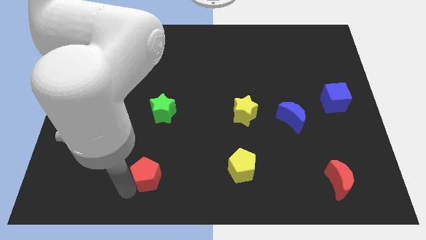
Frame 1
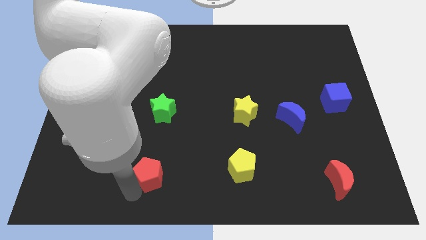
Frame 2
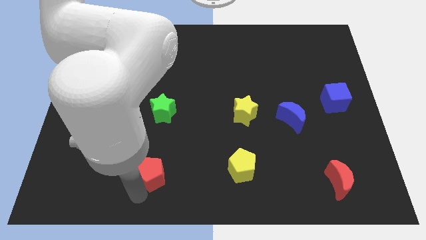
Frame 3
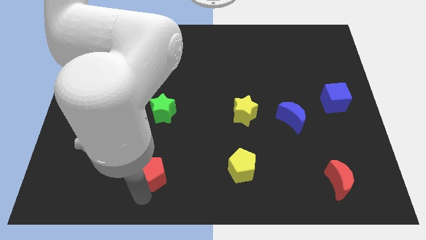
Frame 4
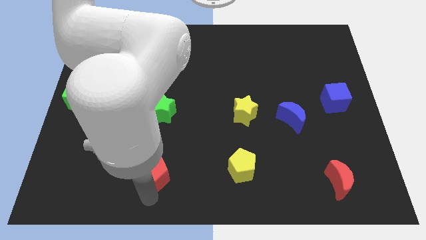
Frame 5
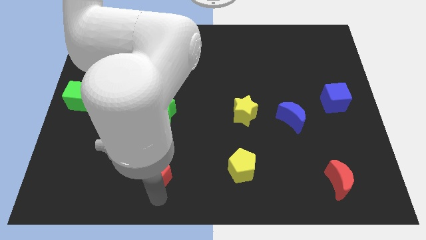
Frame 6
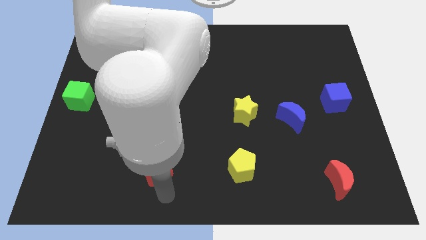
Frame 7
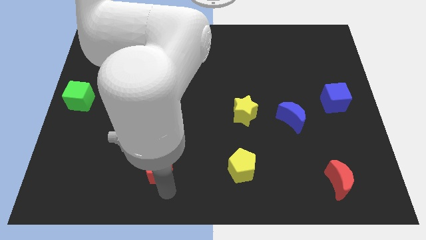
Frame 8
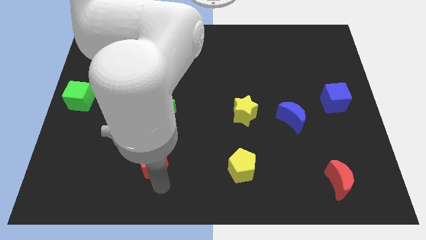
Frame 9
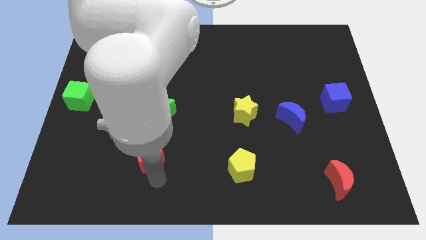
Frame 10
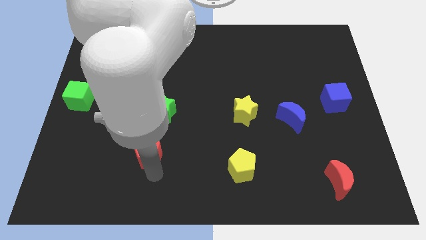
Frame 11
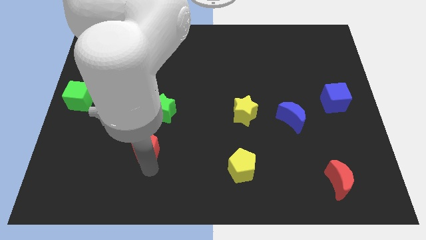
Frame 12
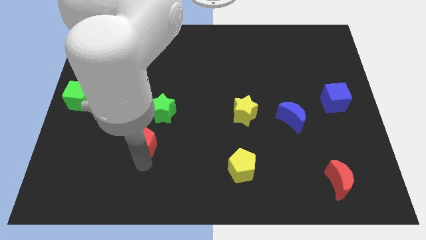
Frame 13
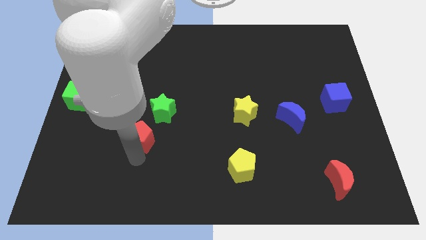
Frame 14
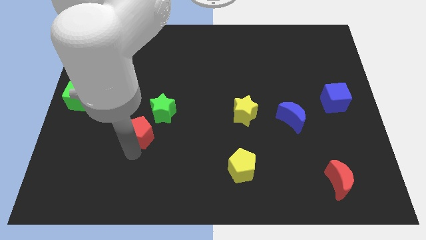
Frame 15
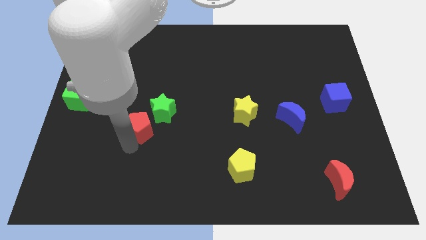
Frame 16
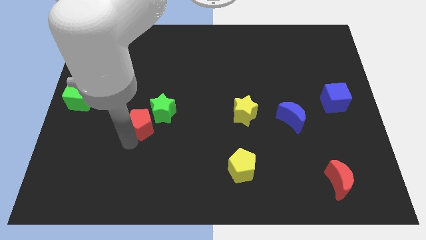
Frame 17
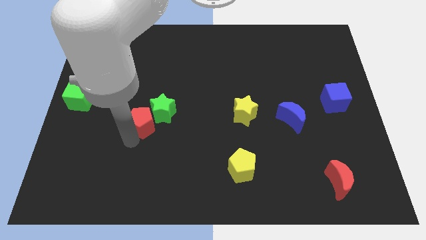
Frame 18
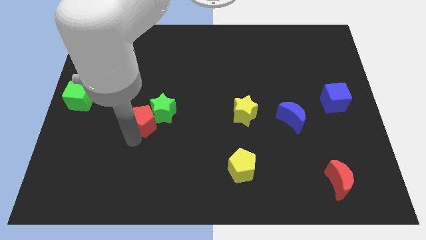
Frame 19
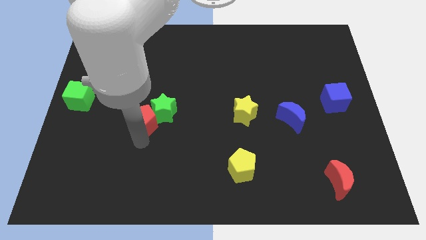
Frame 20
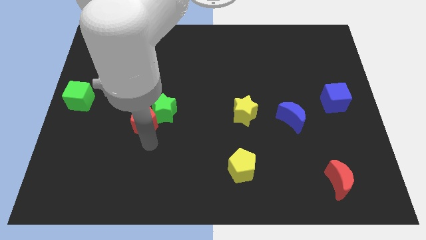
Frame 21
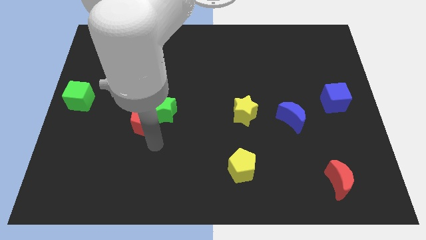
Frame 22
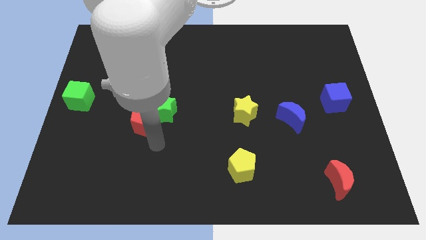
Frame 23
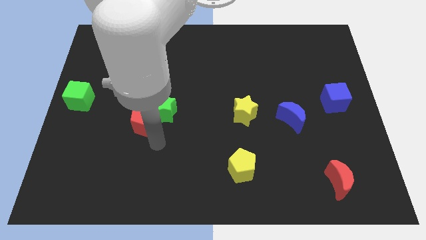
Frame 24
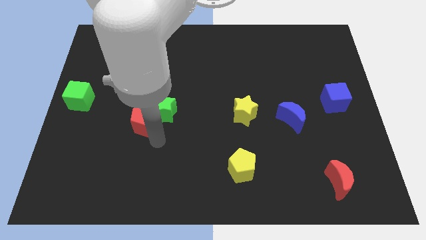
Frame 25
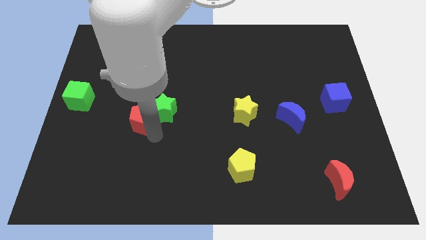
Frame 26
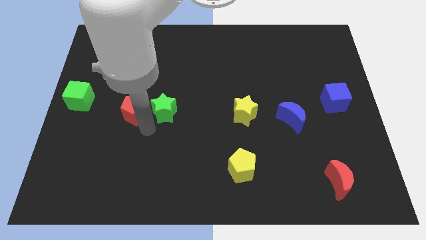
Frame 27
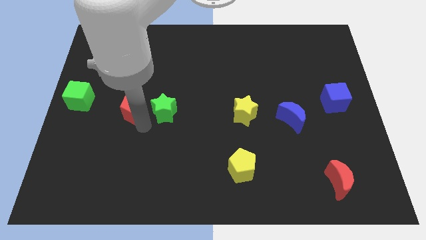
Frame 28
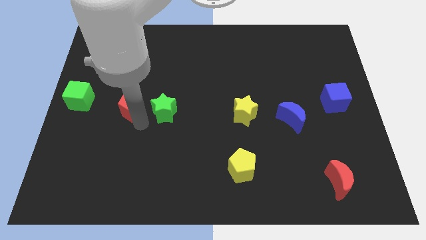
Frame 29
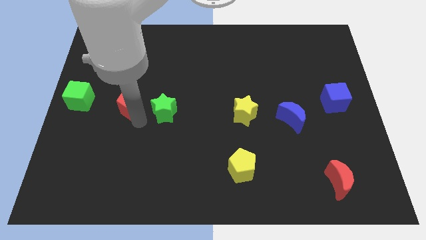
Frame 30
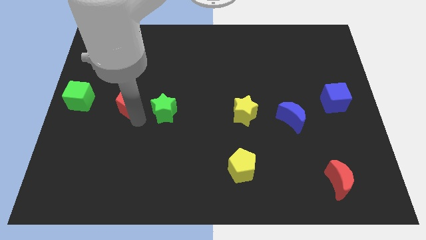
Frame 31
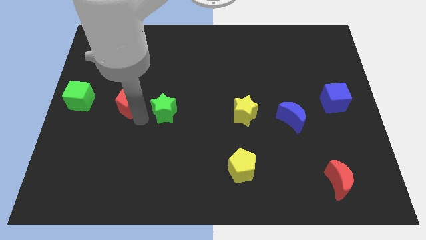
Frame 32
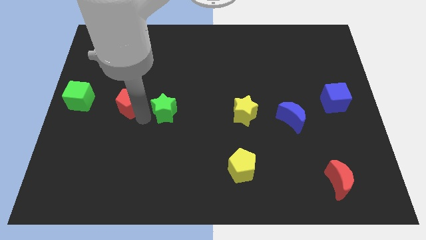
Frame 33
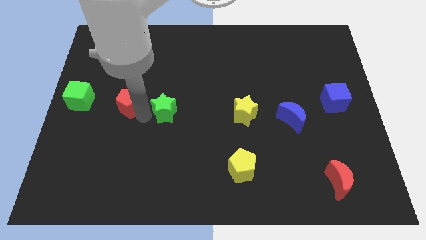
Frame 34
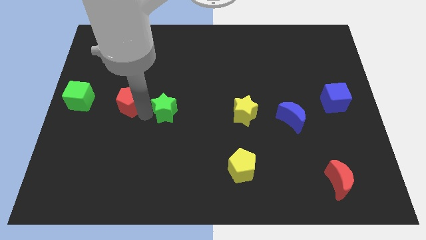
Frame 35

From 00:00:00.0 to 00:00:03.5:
push red pentagon into green star

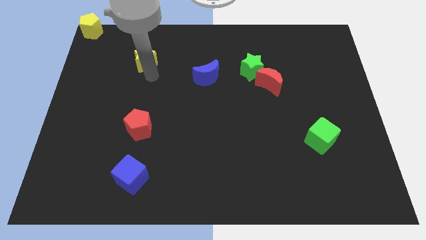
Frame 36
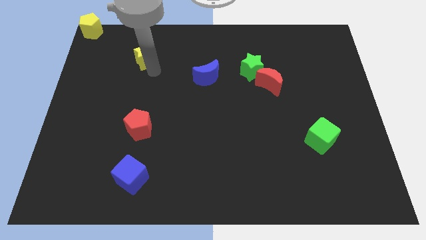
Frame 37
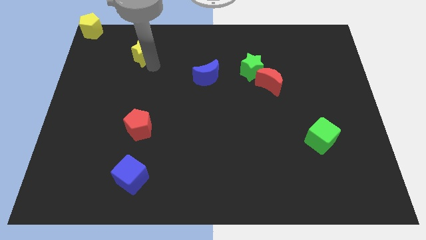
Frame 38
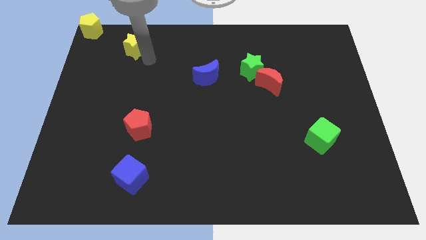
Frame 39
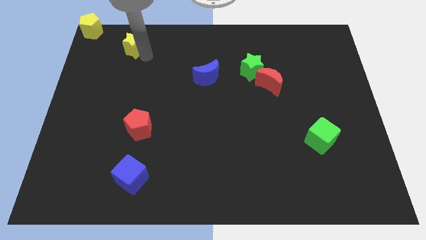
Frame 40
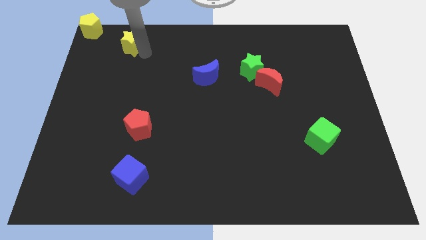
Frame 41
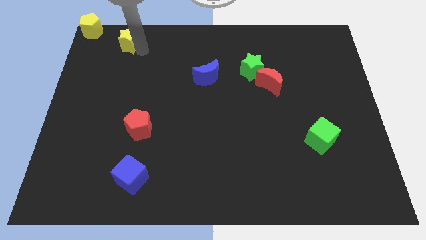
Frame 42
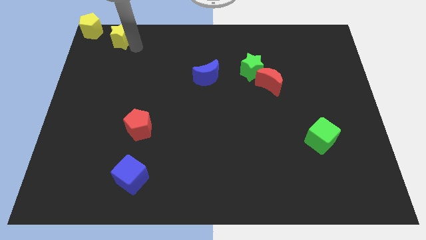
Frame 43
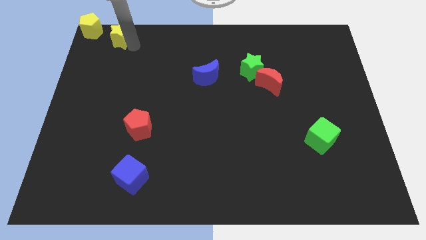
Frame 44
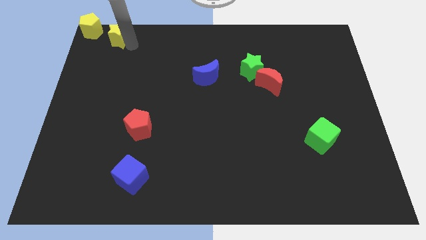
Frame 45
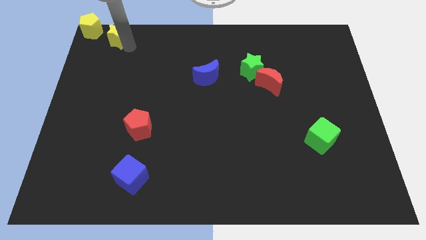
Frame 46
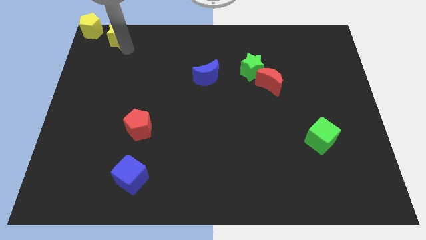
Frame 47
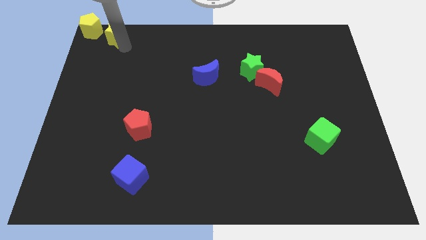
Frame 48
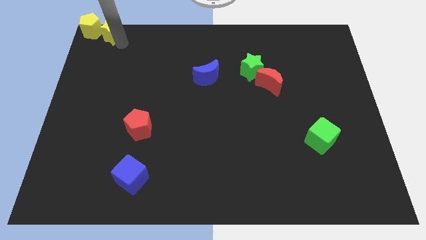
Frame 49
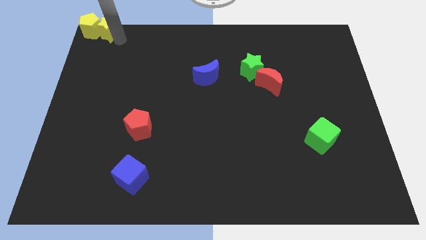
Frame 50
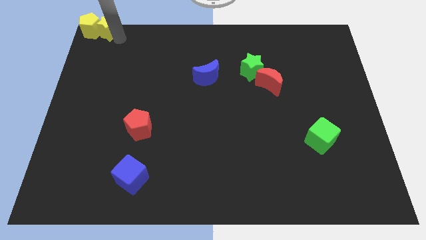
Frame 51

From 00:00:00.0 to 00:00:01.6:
place yellow star right of the yellow pentagon

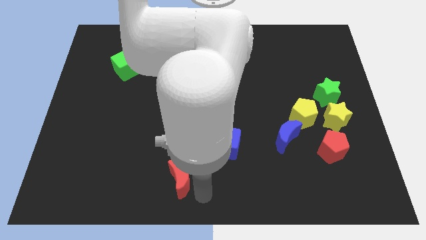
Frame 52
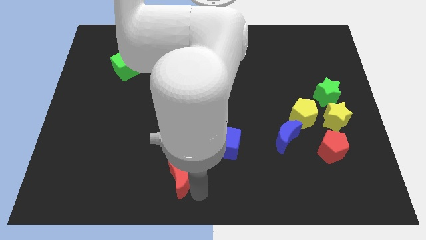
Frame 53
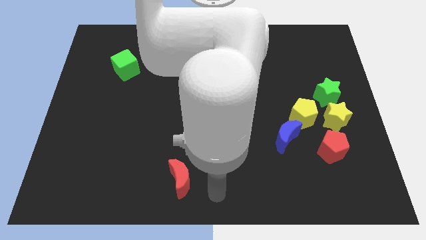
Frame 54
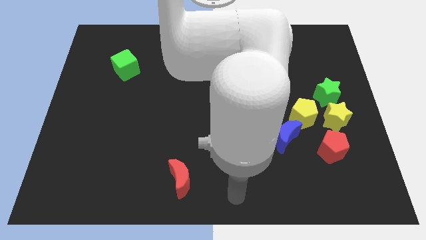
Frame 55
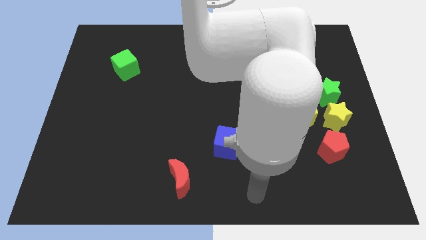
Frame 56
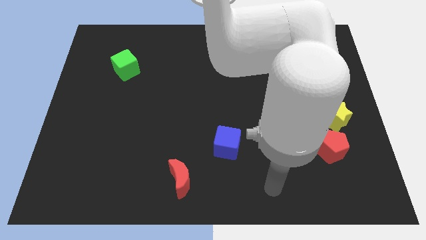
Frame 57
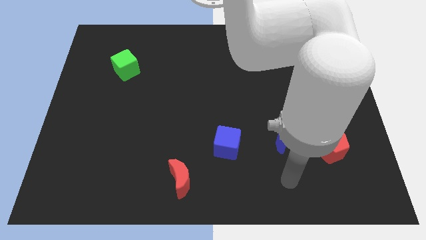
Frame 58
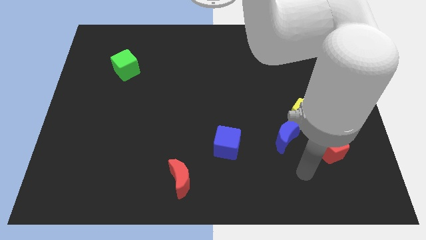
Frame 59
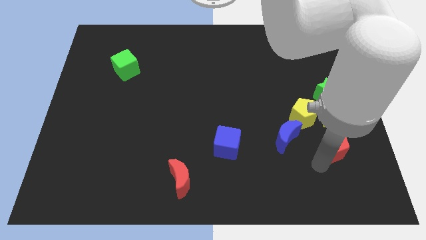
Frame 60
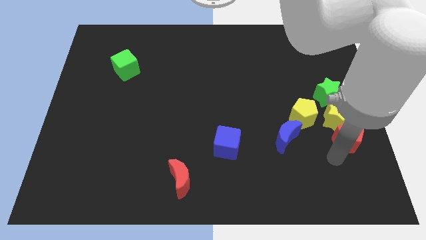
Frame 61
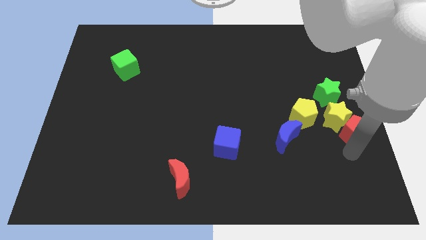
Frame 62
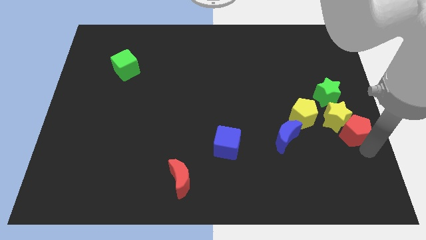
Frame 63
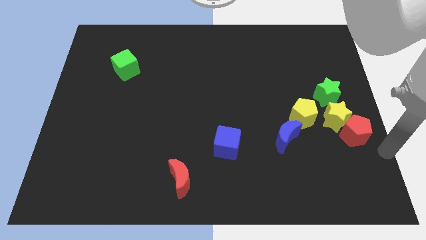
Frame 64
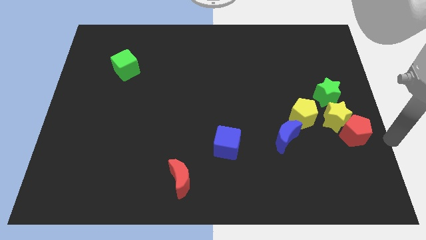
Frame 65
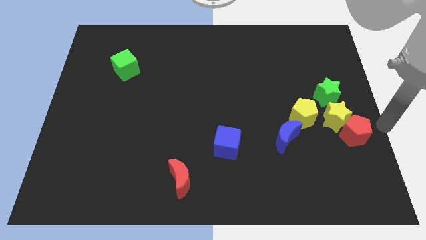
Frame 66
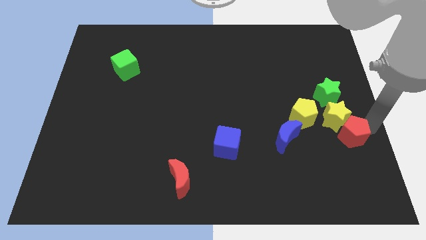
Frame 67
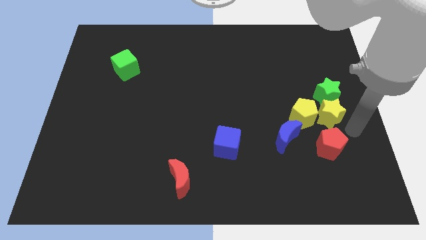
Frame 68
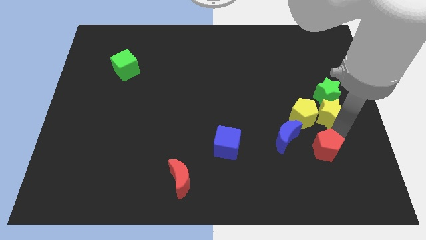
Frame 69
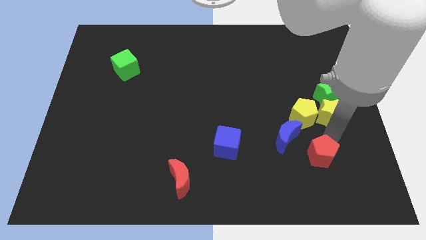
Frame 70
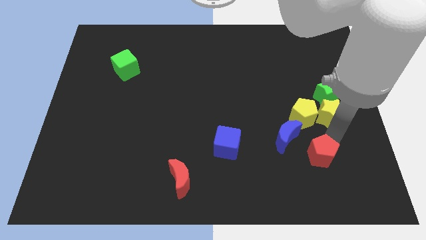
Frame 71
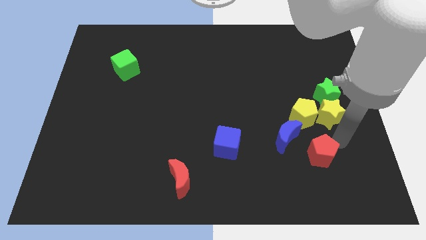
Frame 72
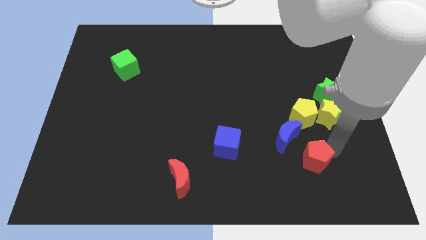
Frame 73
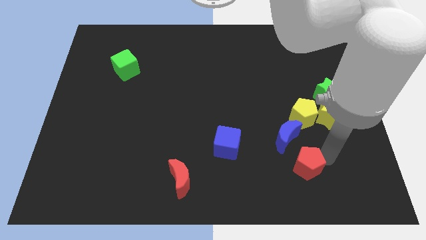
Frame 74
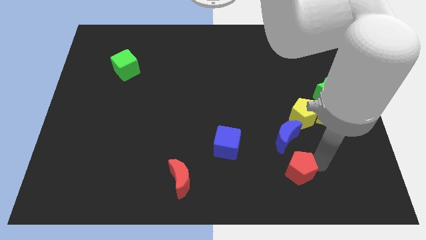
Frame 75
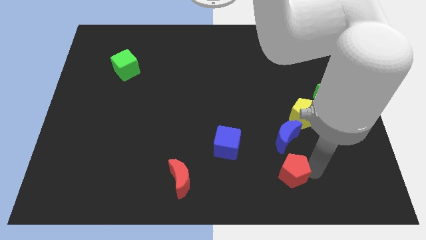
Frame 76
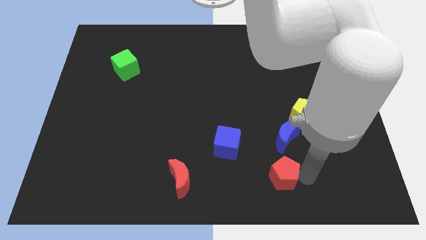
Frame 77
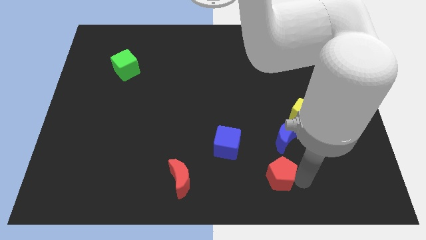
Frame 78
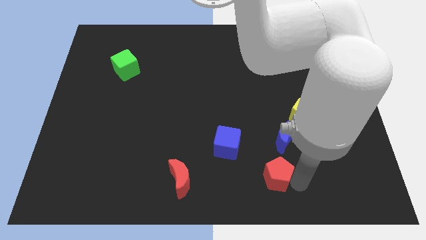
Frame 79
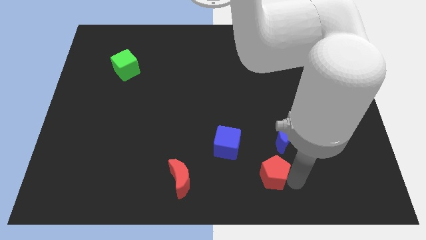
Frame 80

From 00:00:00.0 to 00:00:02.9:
separate red pentagon and yellow star

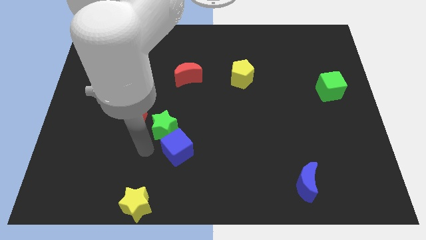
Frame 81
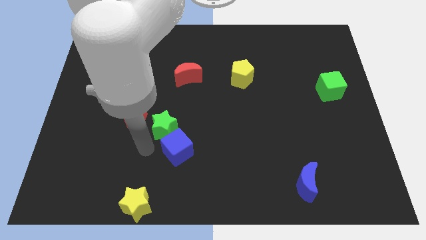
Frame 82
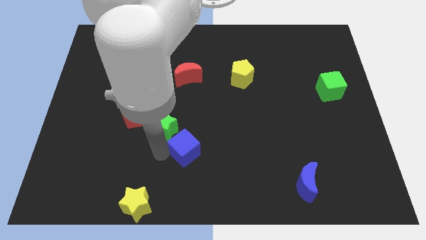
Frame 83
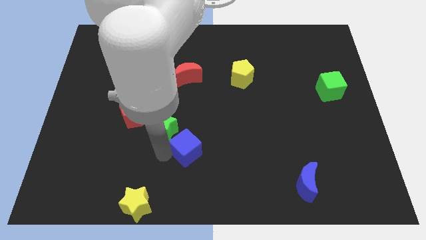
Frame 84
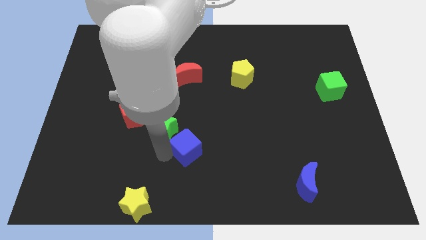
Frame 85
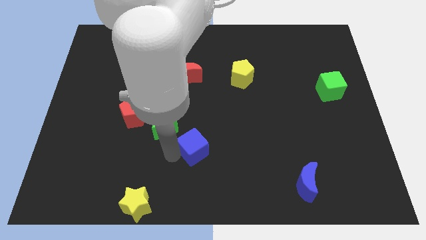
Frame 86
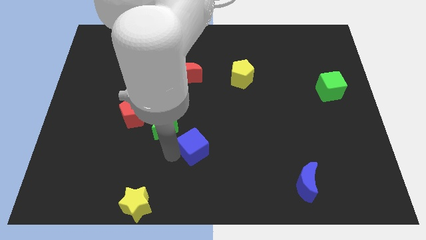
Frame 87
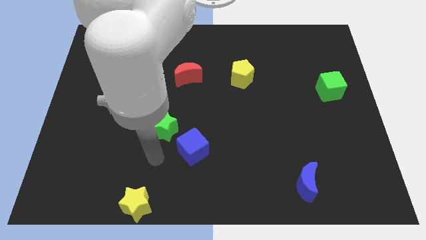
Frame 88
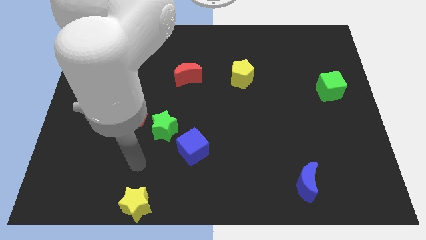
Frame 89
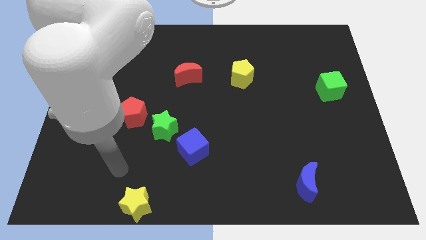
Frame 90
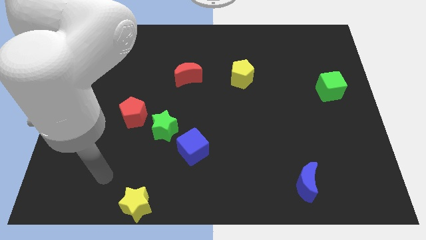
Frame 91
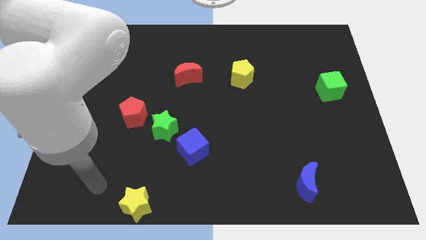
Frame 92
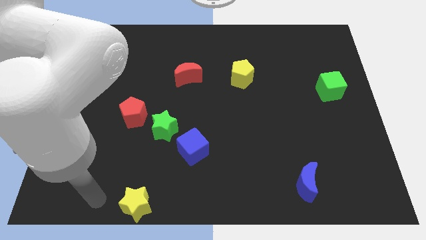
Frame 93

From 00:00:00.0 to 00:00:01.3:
move the blue cube slightly to the right
